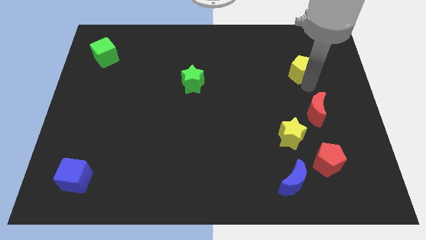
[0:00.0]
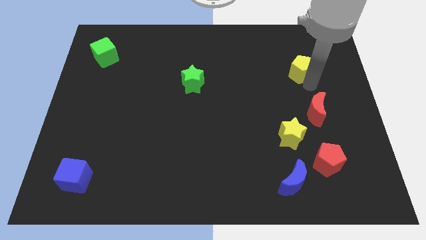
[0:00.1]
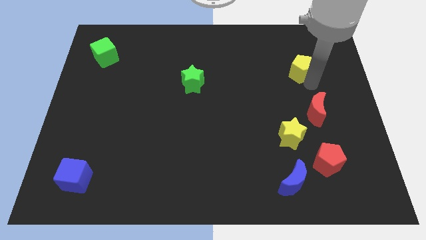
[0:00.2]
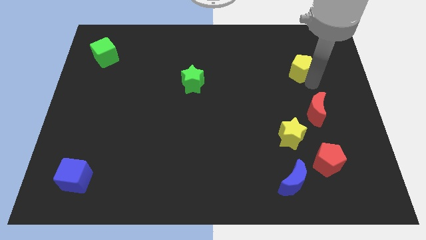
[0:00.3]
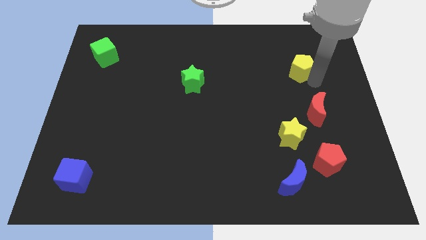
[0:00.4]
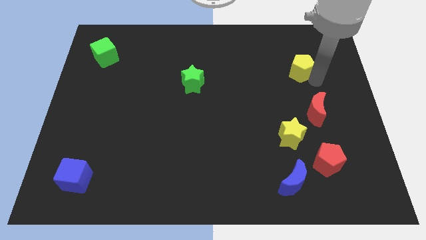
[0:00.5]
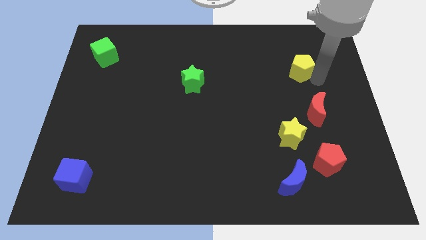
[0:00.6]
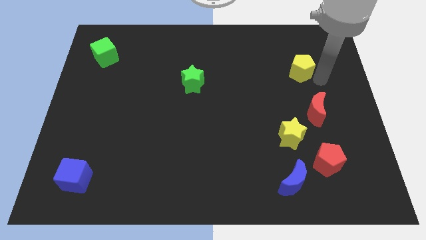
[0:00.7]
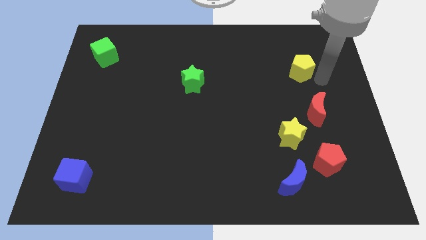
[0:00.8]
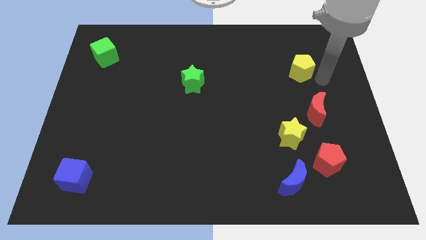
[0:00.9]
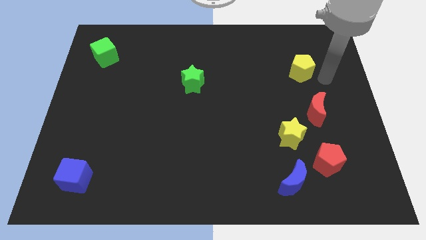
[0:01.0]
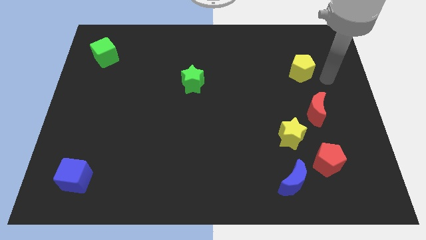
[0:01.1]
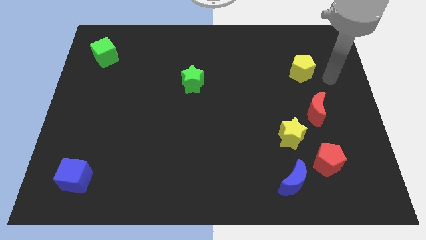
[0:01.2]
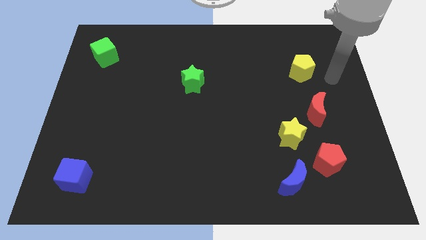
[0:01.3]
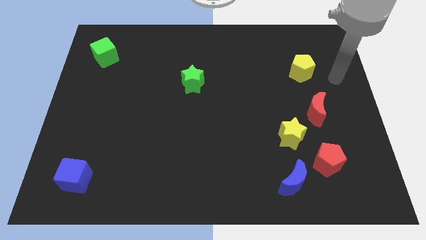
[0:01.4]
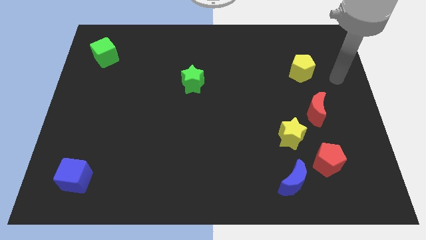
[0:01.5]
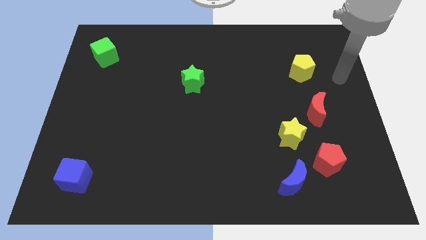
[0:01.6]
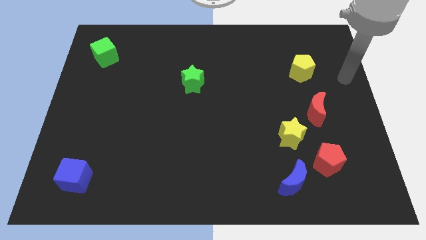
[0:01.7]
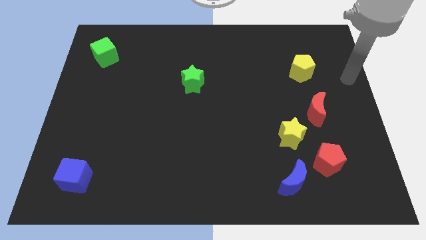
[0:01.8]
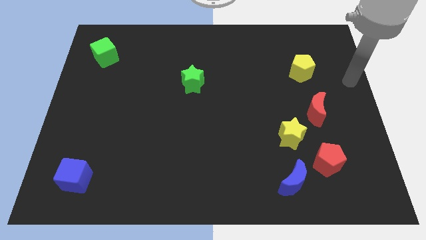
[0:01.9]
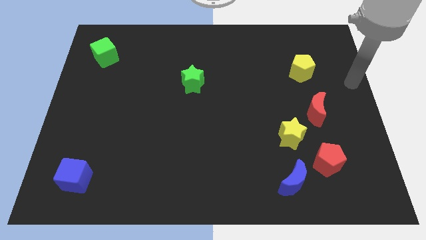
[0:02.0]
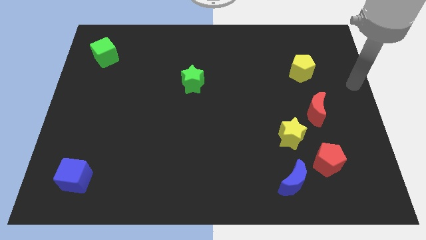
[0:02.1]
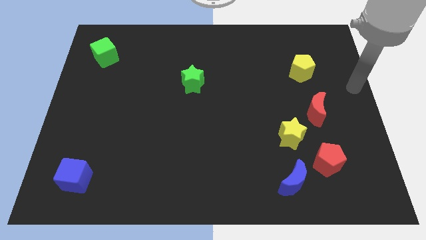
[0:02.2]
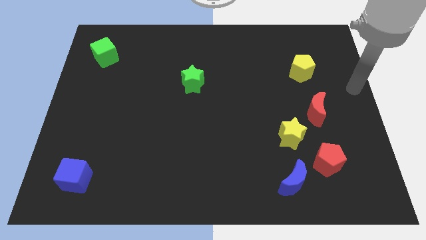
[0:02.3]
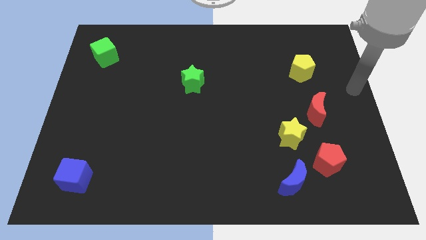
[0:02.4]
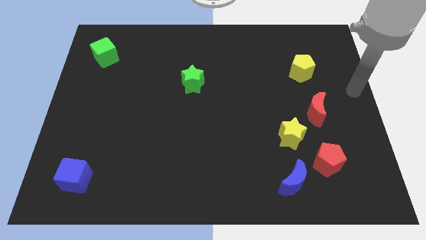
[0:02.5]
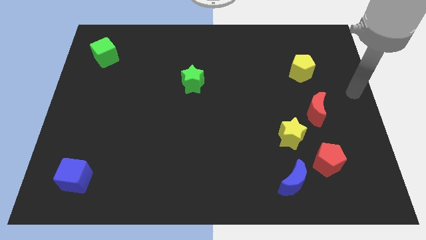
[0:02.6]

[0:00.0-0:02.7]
move yourself away from the yellow pentagon

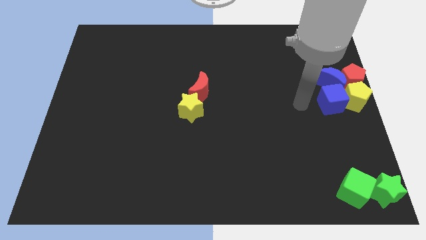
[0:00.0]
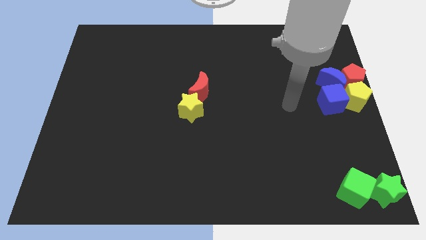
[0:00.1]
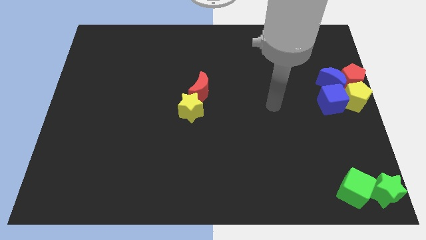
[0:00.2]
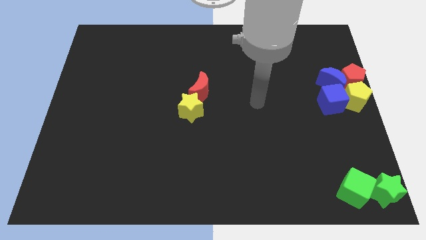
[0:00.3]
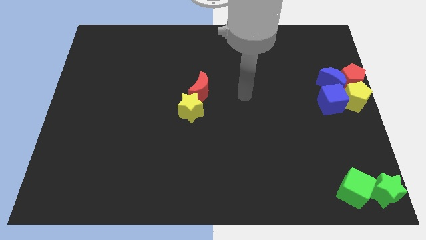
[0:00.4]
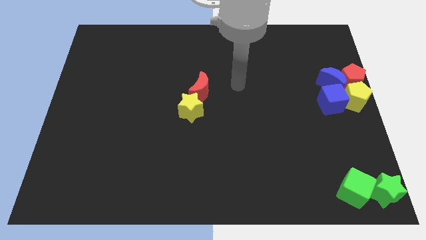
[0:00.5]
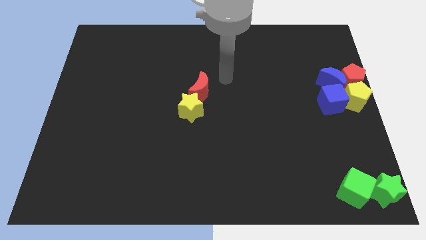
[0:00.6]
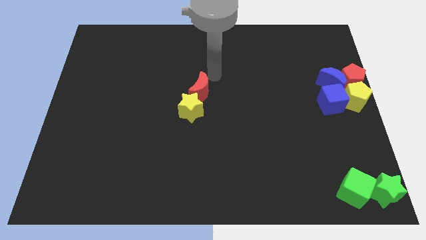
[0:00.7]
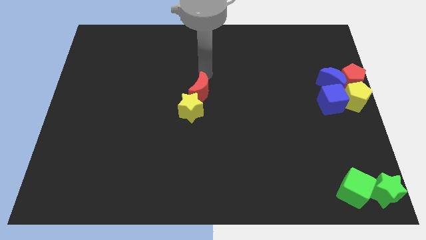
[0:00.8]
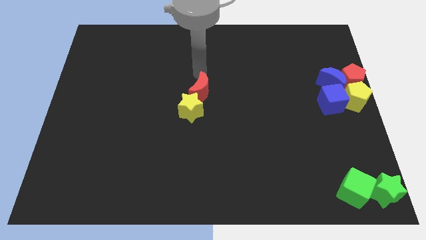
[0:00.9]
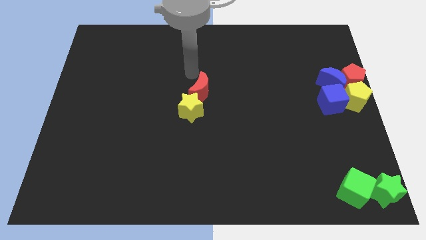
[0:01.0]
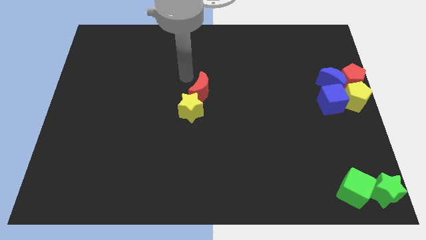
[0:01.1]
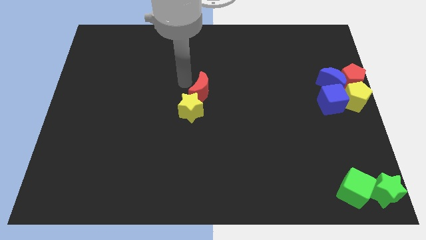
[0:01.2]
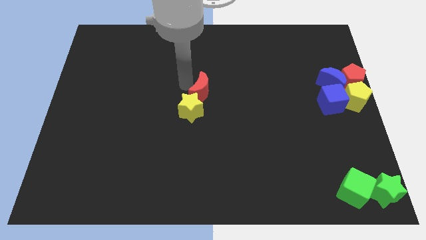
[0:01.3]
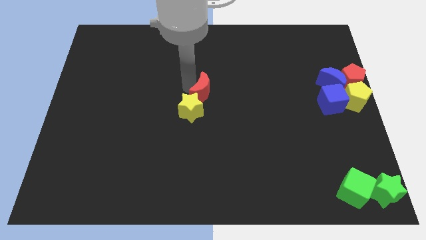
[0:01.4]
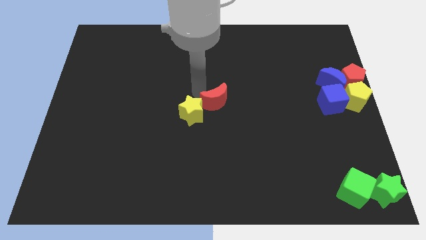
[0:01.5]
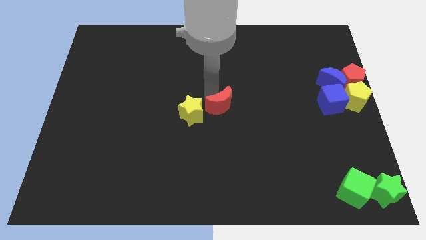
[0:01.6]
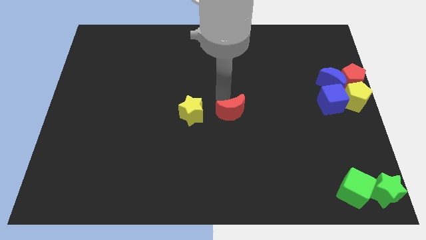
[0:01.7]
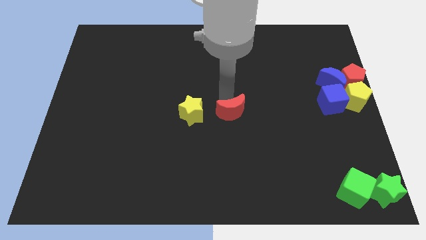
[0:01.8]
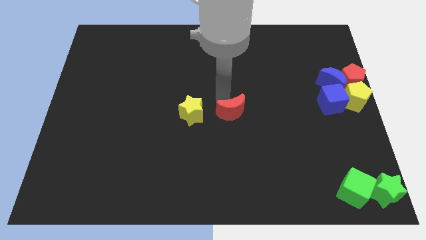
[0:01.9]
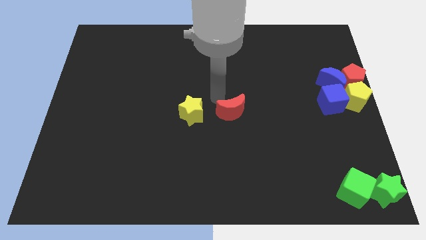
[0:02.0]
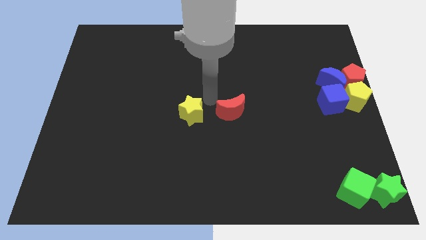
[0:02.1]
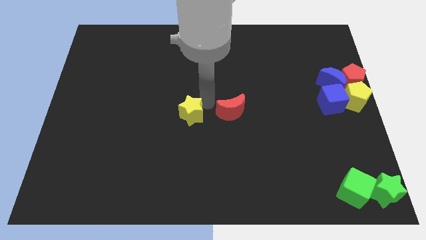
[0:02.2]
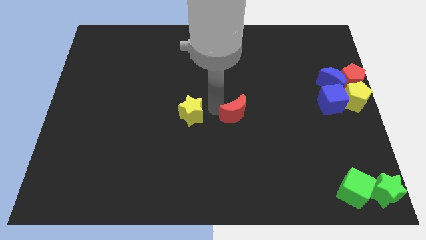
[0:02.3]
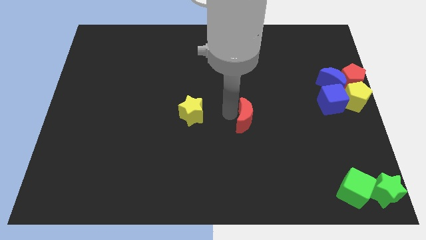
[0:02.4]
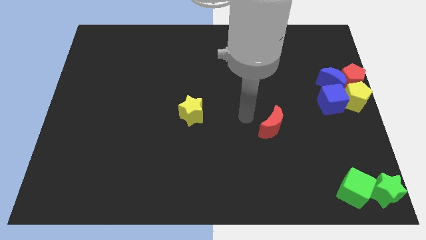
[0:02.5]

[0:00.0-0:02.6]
push the red crescent to the right of the yellow star

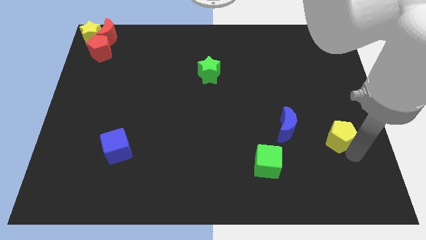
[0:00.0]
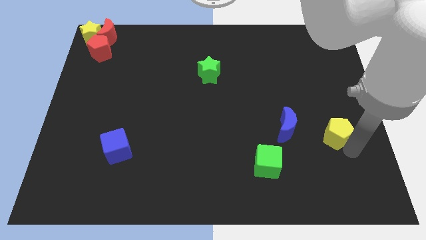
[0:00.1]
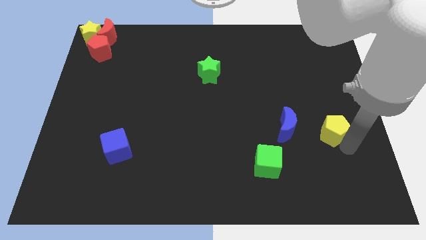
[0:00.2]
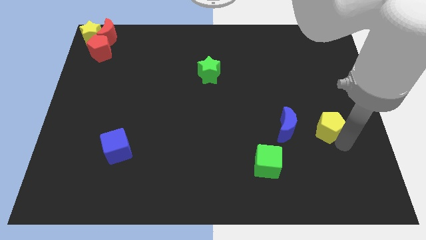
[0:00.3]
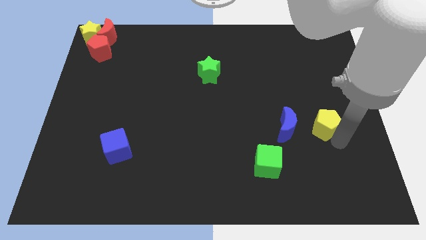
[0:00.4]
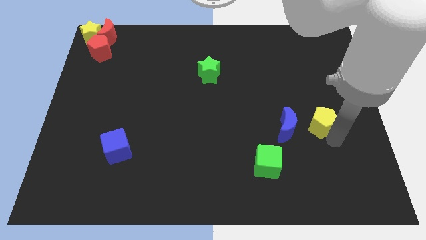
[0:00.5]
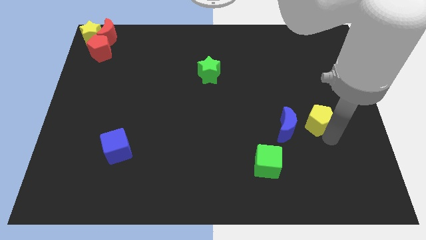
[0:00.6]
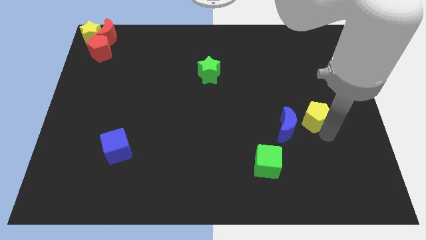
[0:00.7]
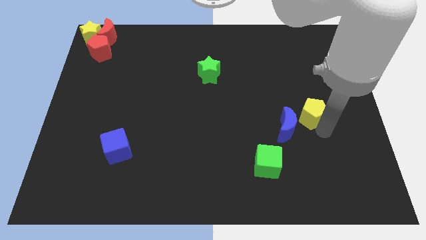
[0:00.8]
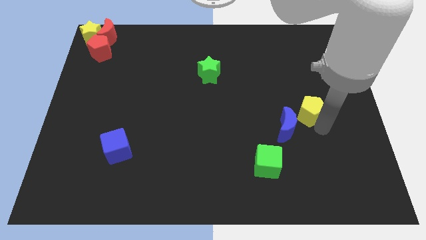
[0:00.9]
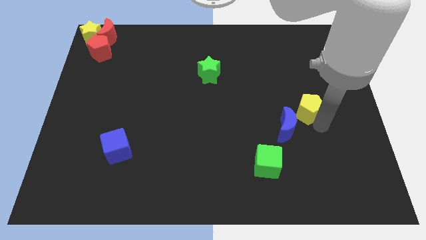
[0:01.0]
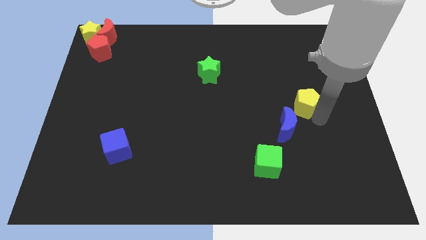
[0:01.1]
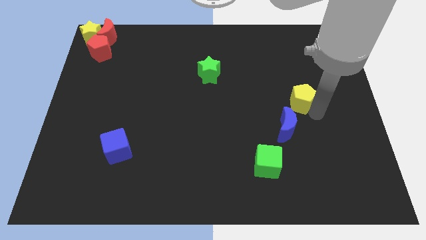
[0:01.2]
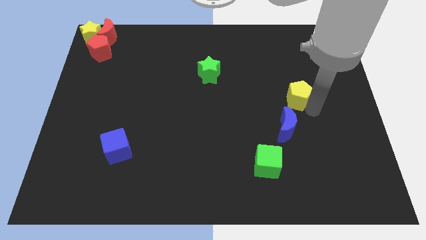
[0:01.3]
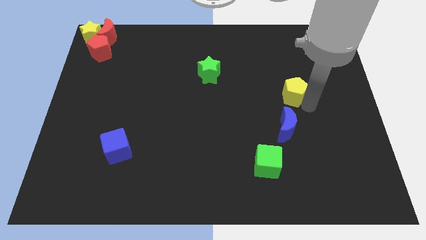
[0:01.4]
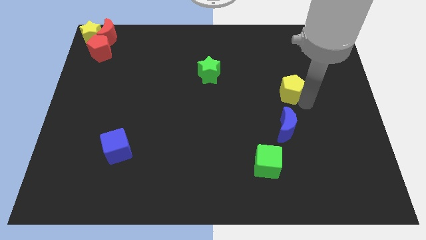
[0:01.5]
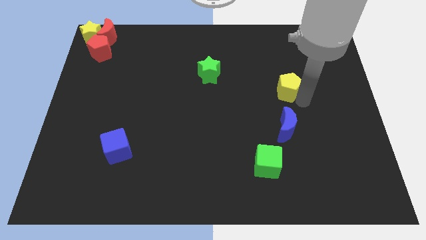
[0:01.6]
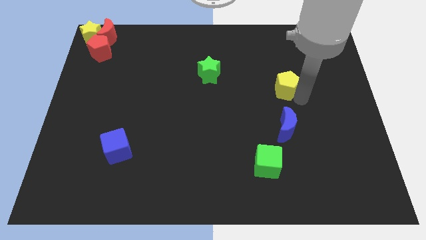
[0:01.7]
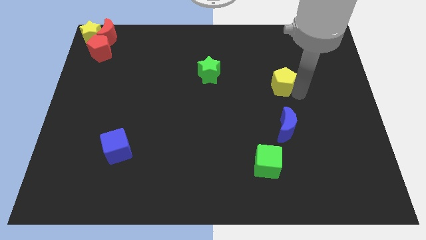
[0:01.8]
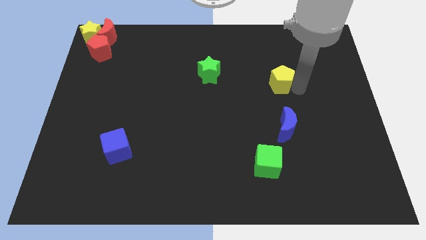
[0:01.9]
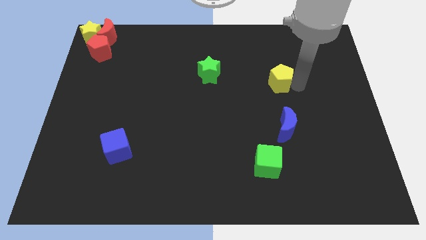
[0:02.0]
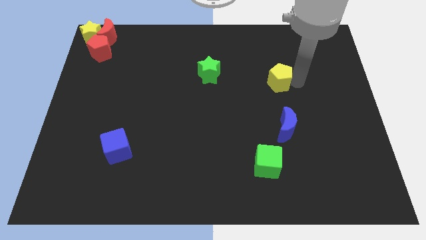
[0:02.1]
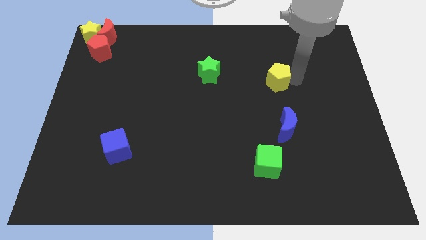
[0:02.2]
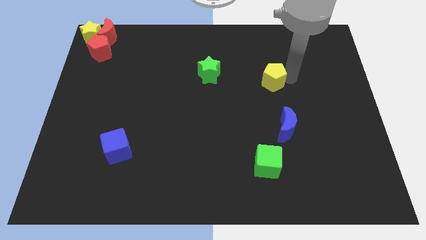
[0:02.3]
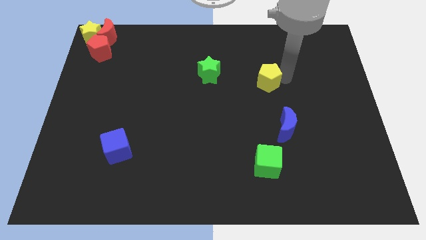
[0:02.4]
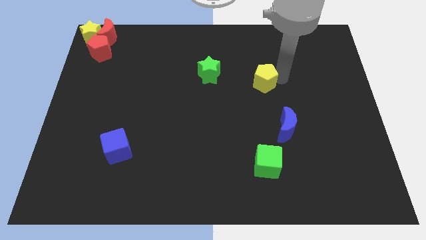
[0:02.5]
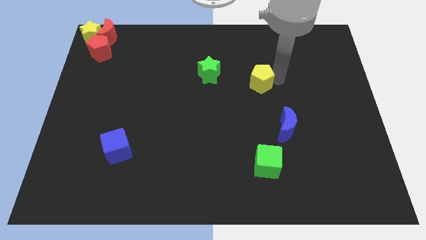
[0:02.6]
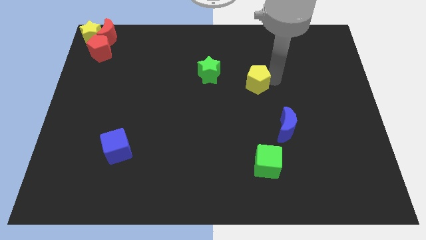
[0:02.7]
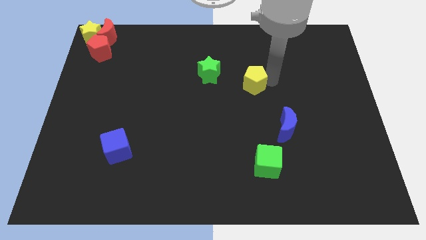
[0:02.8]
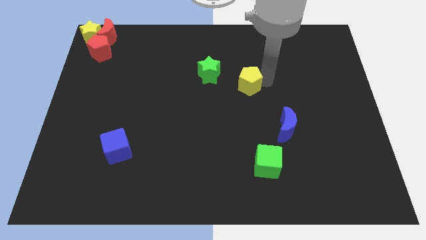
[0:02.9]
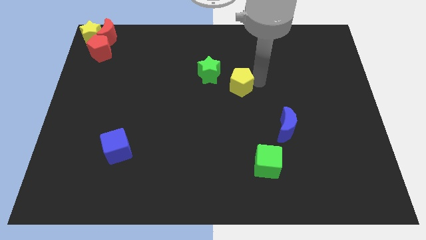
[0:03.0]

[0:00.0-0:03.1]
push the yellow pentagon towards the center of the board

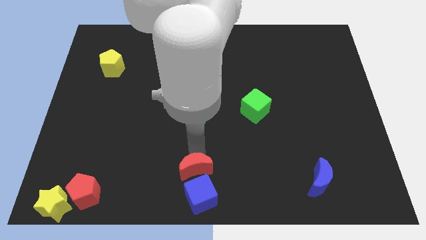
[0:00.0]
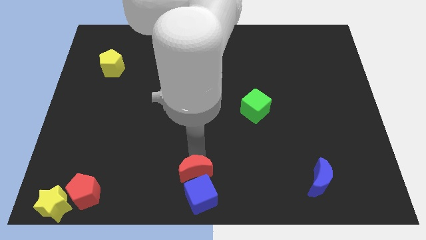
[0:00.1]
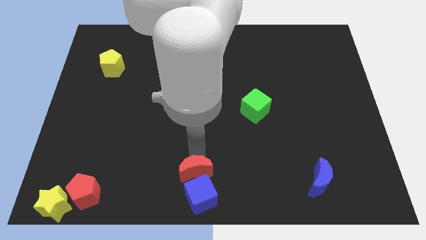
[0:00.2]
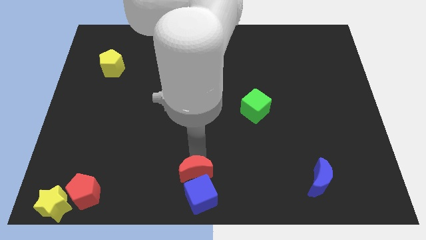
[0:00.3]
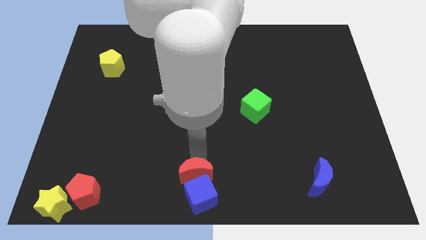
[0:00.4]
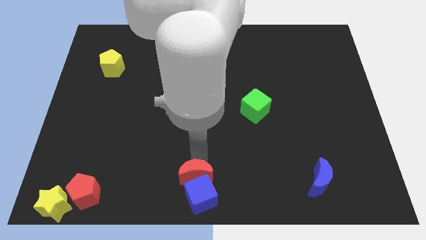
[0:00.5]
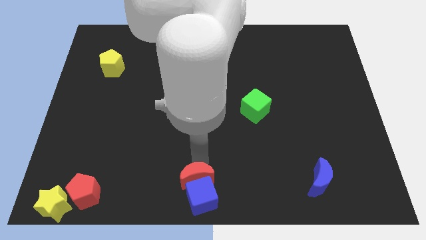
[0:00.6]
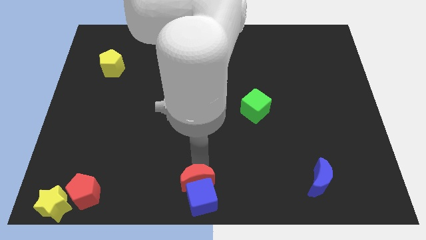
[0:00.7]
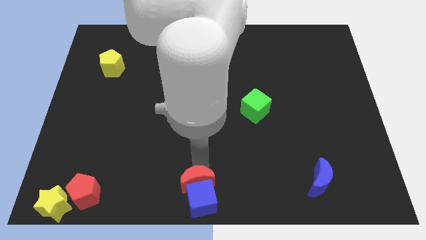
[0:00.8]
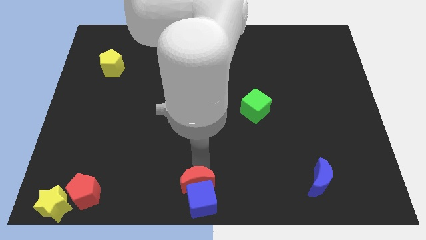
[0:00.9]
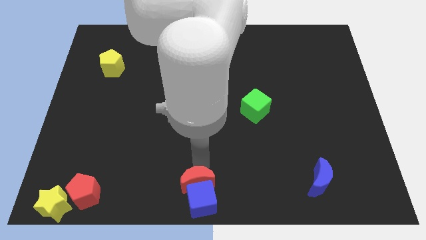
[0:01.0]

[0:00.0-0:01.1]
push the red moon into the blue cube
